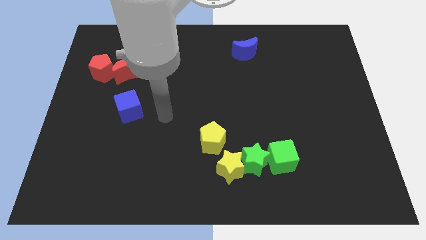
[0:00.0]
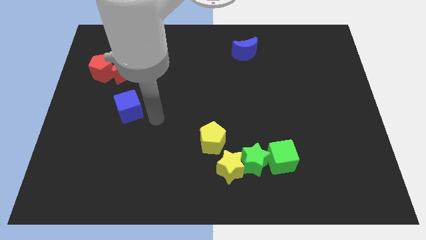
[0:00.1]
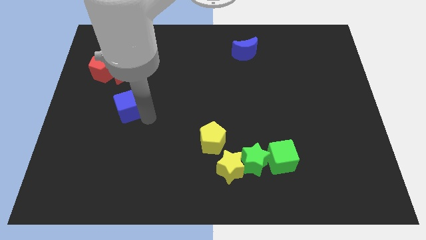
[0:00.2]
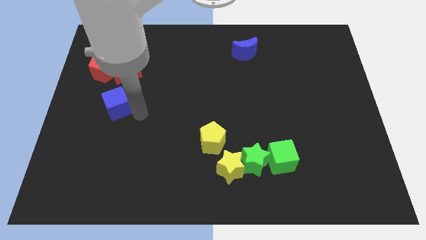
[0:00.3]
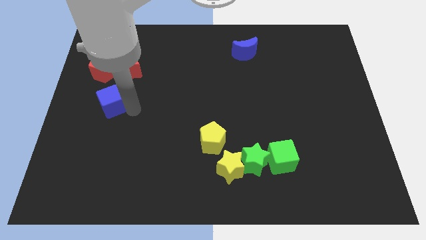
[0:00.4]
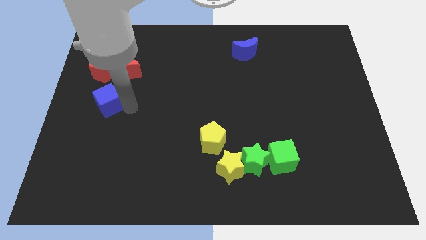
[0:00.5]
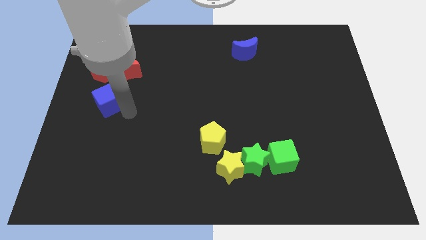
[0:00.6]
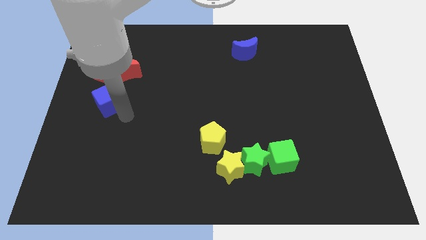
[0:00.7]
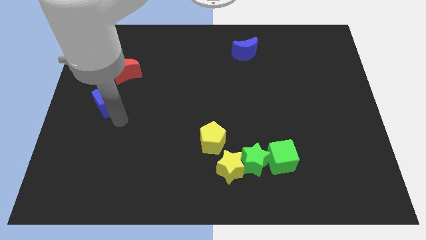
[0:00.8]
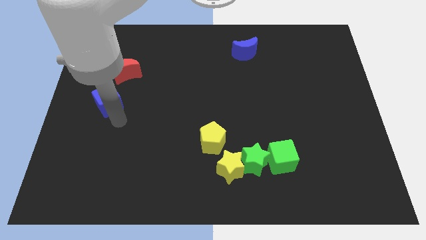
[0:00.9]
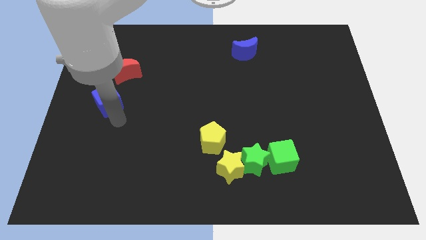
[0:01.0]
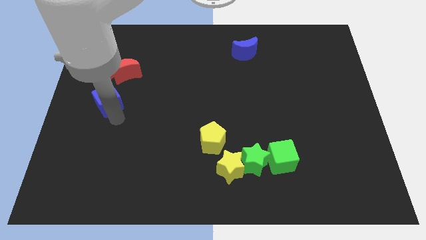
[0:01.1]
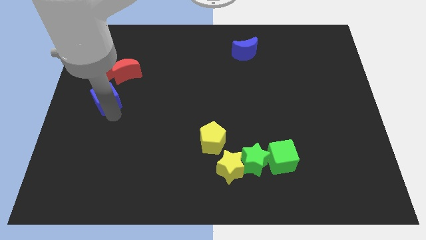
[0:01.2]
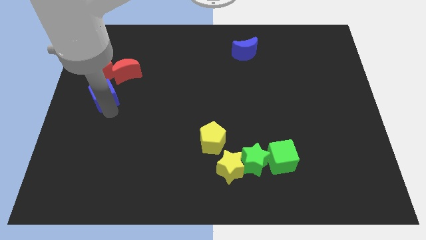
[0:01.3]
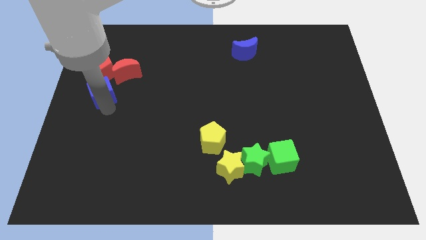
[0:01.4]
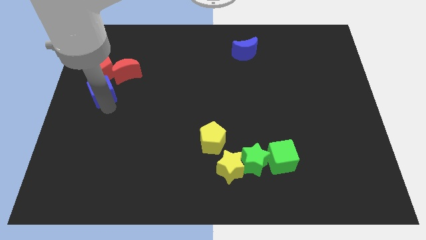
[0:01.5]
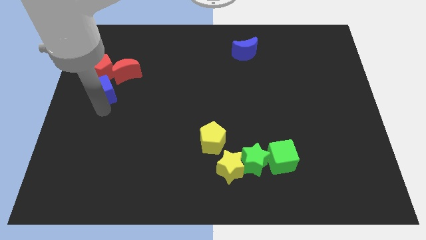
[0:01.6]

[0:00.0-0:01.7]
push blue cube below red pentagon

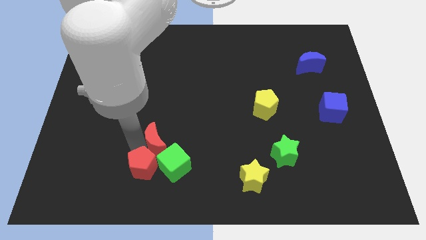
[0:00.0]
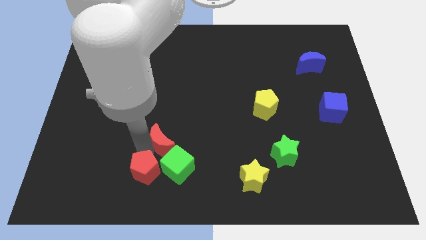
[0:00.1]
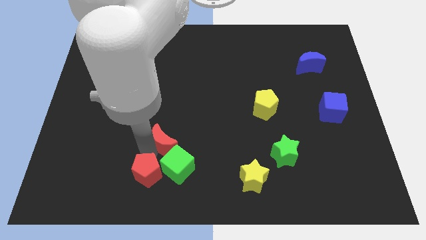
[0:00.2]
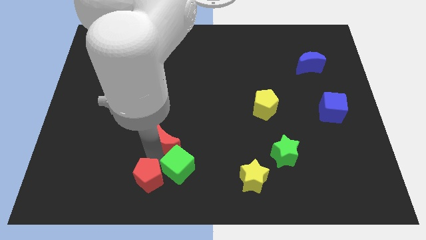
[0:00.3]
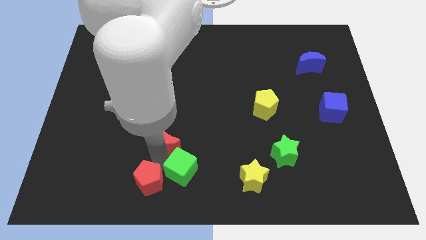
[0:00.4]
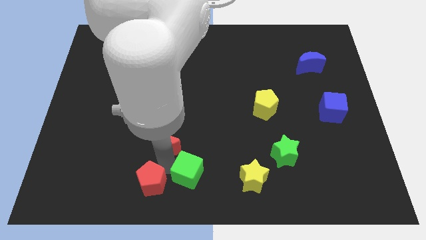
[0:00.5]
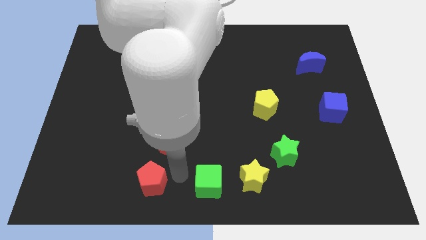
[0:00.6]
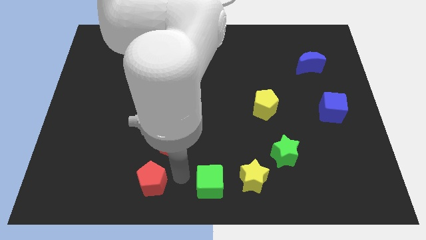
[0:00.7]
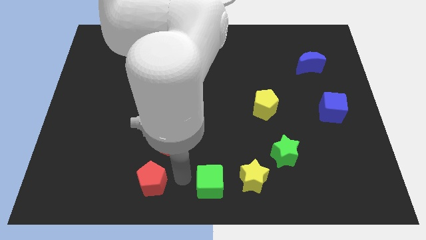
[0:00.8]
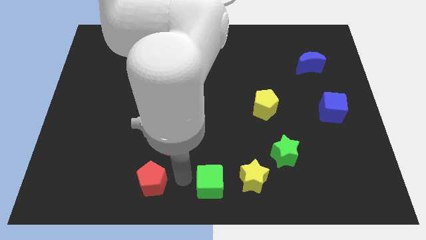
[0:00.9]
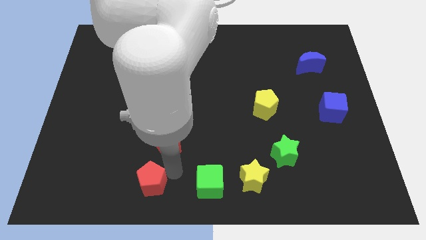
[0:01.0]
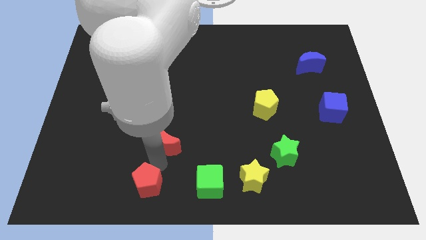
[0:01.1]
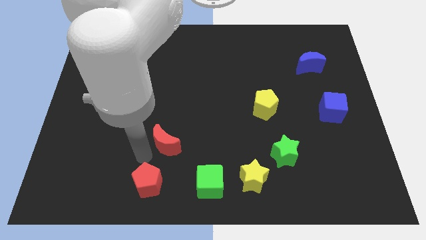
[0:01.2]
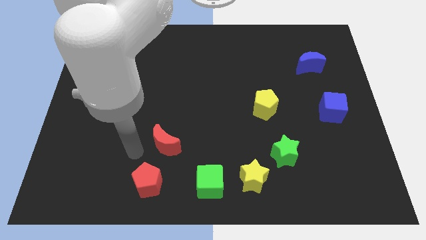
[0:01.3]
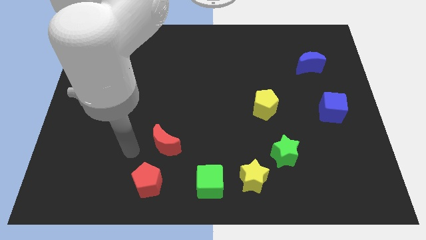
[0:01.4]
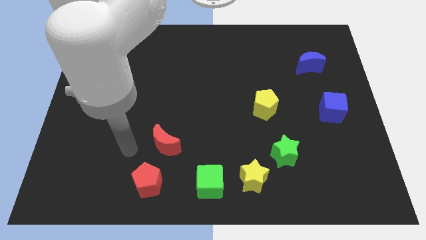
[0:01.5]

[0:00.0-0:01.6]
separate the green cube from the red blocks

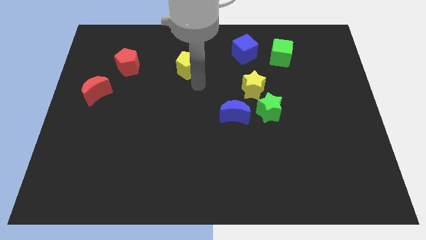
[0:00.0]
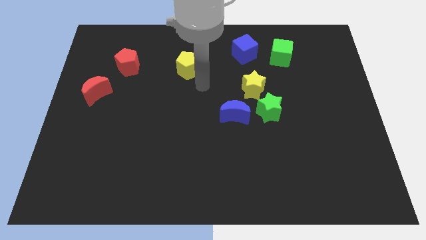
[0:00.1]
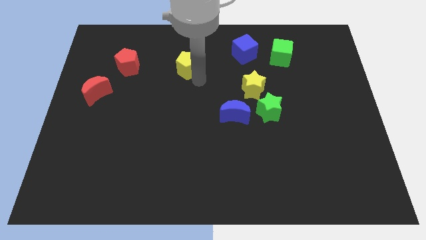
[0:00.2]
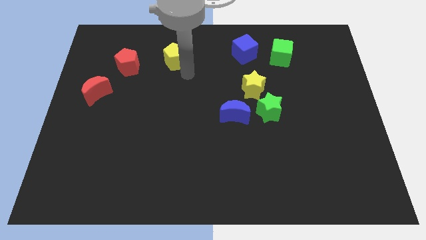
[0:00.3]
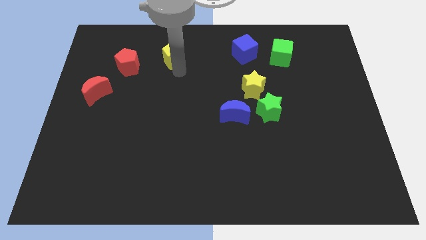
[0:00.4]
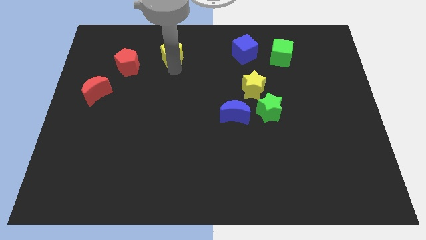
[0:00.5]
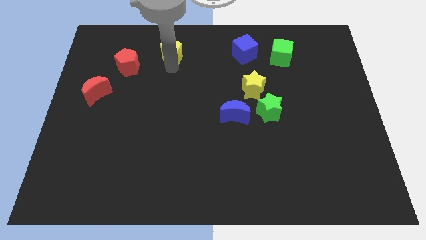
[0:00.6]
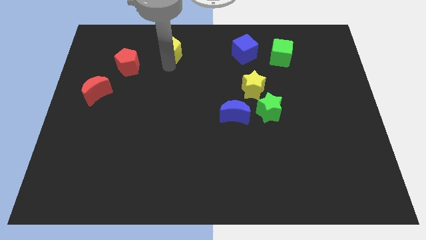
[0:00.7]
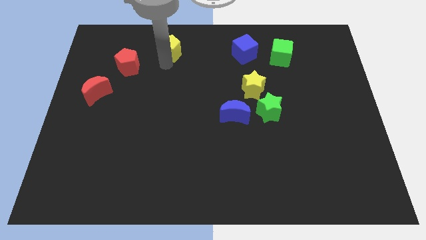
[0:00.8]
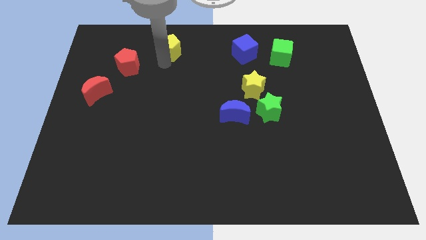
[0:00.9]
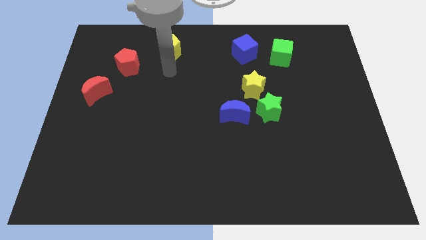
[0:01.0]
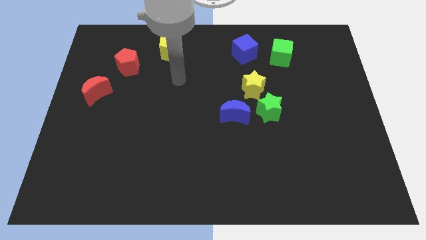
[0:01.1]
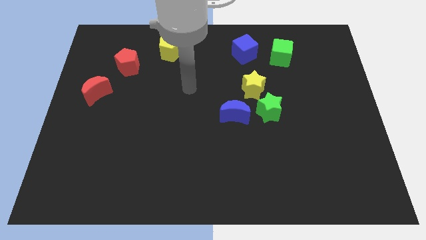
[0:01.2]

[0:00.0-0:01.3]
move the yellow pentagon to the top of the board

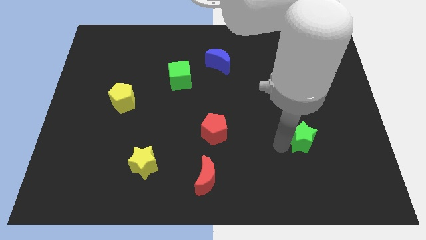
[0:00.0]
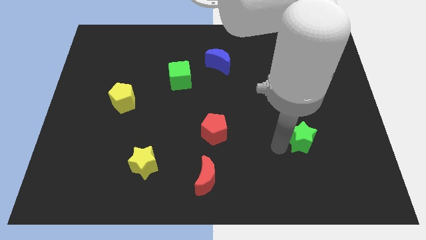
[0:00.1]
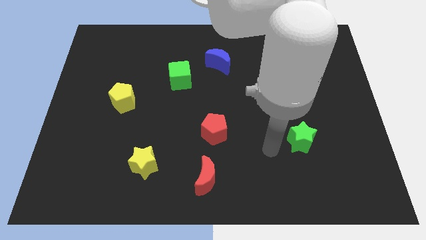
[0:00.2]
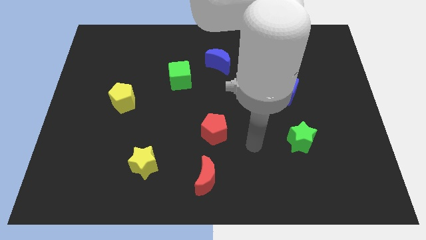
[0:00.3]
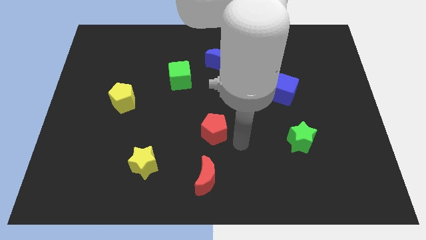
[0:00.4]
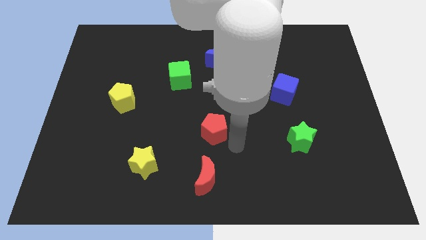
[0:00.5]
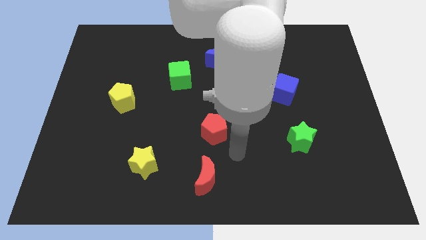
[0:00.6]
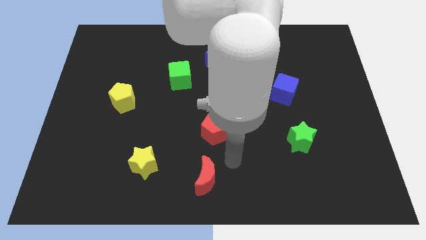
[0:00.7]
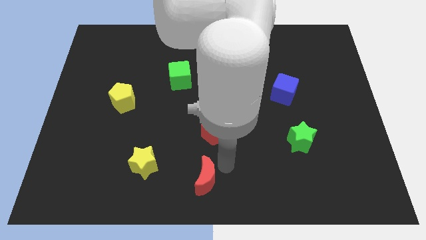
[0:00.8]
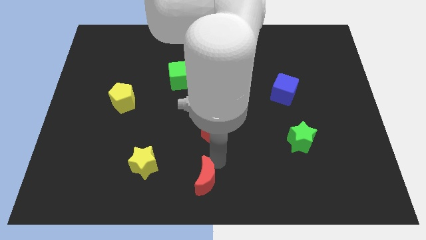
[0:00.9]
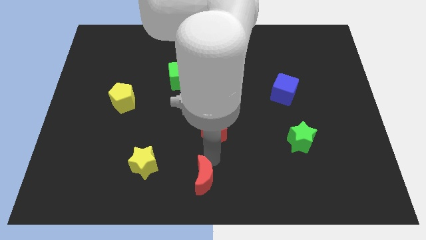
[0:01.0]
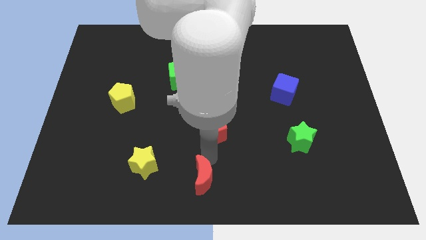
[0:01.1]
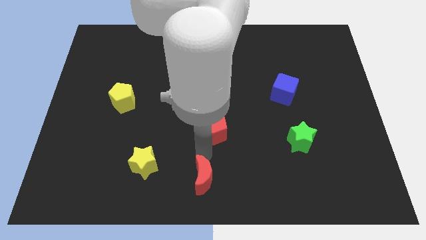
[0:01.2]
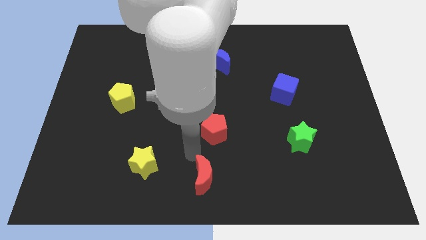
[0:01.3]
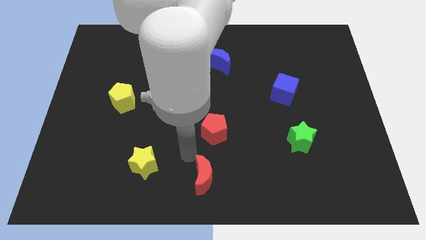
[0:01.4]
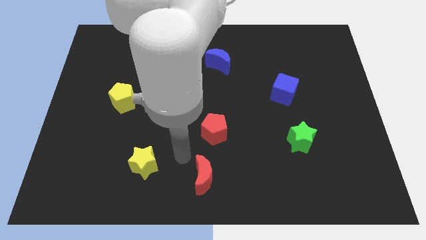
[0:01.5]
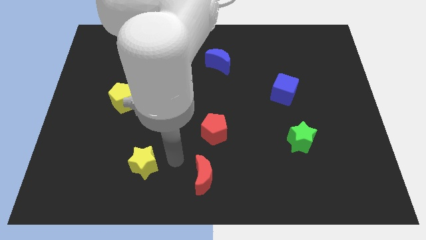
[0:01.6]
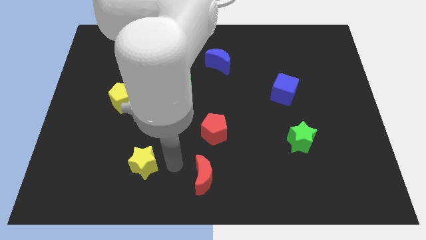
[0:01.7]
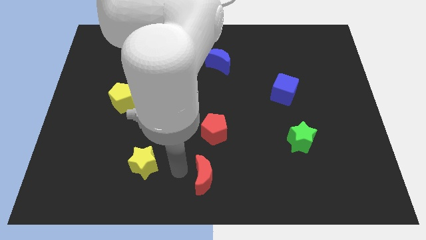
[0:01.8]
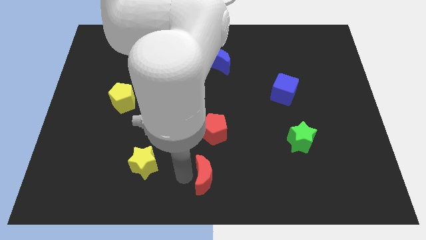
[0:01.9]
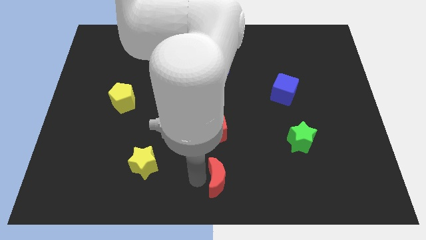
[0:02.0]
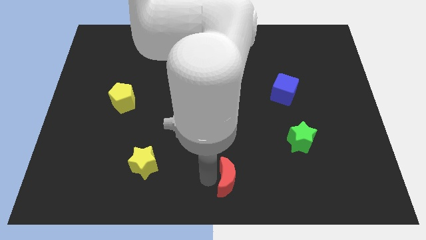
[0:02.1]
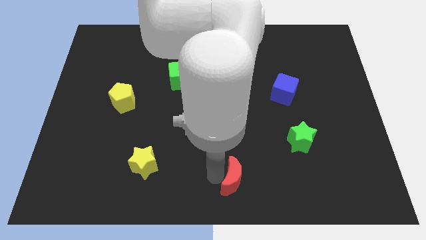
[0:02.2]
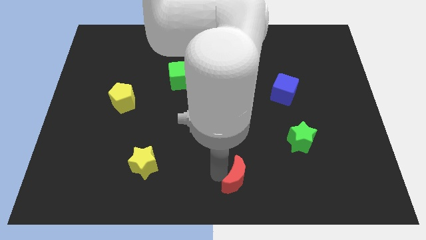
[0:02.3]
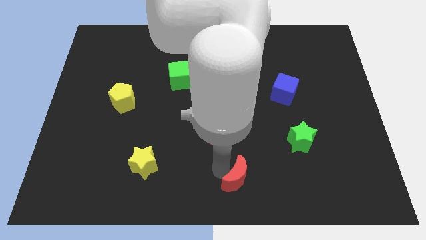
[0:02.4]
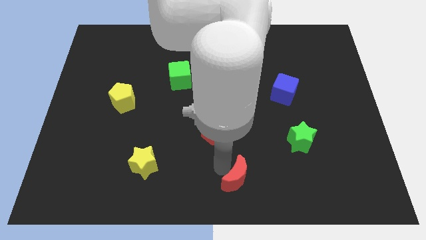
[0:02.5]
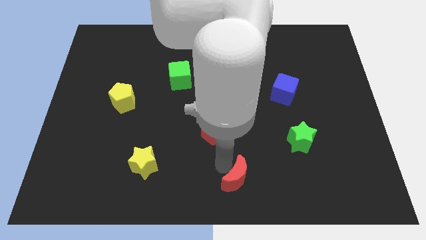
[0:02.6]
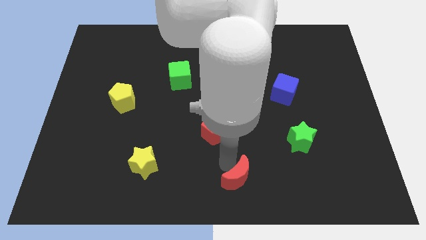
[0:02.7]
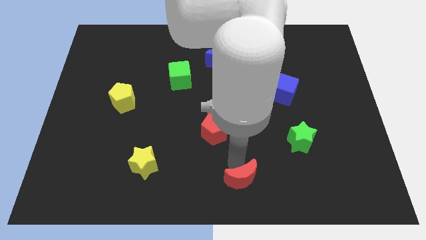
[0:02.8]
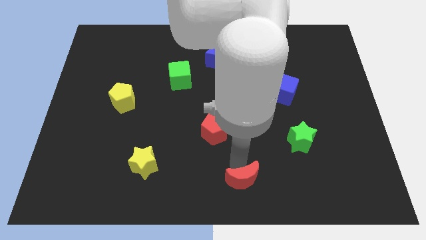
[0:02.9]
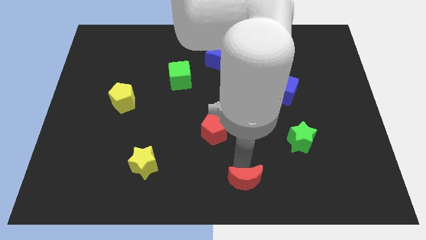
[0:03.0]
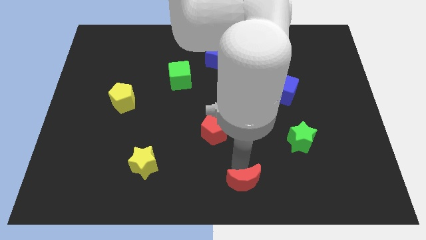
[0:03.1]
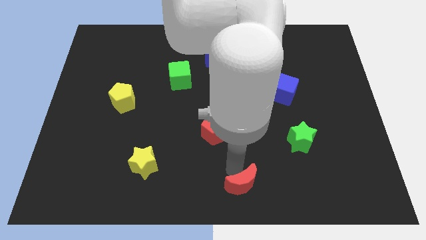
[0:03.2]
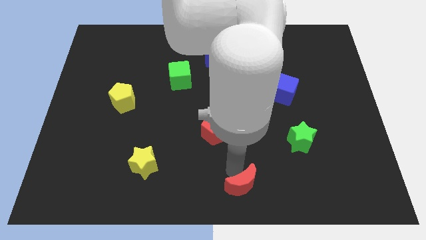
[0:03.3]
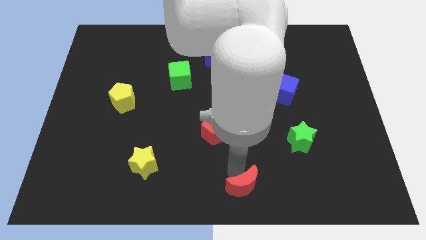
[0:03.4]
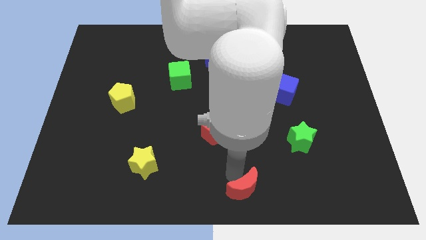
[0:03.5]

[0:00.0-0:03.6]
push red crescent to the bottom of board

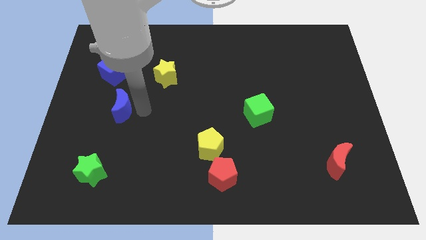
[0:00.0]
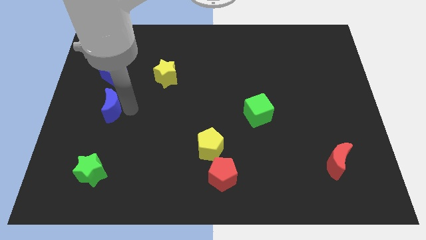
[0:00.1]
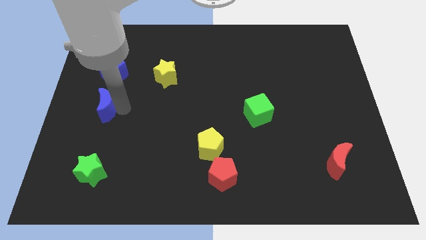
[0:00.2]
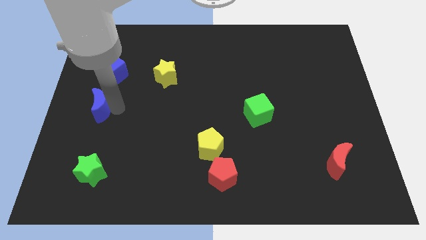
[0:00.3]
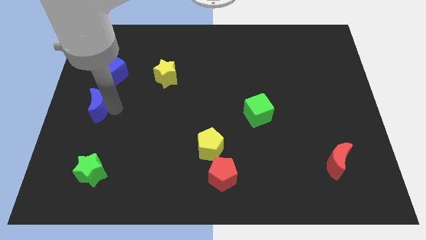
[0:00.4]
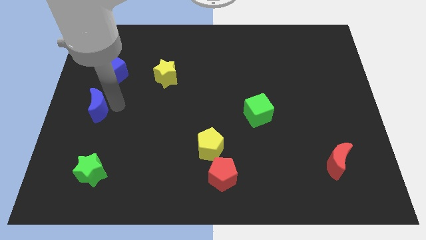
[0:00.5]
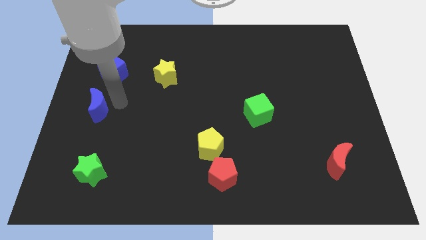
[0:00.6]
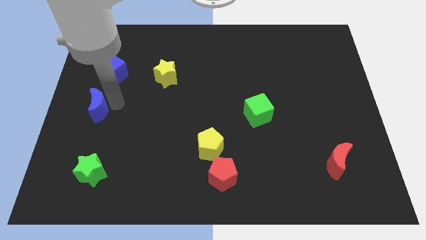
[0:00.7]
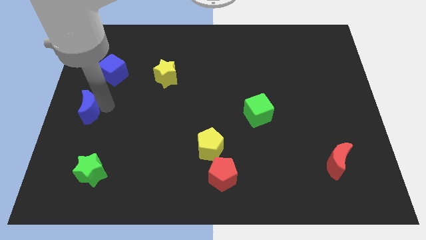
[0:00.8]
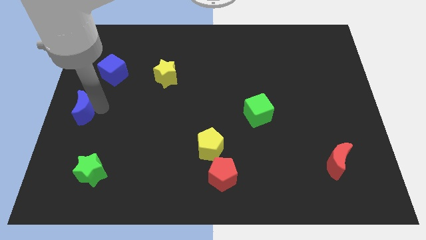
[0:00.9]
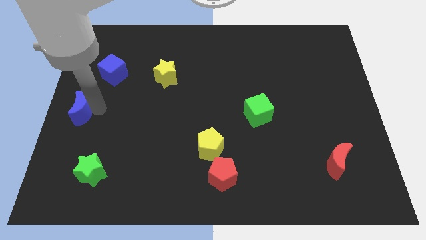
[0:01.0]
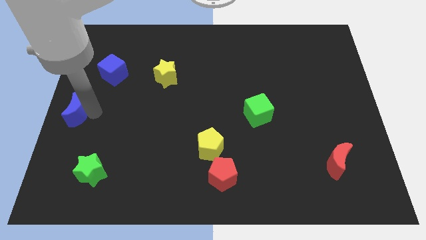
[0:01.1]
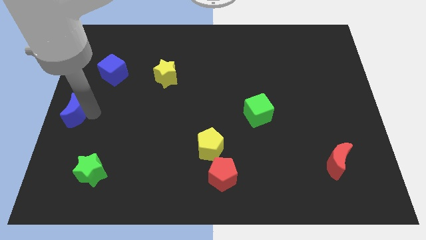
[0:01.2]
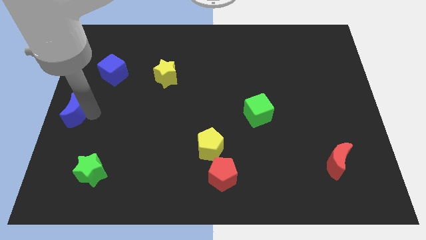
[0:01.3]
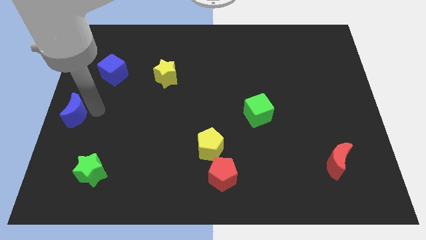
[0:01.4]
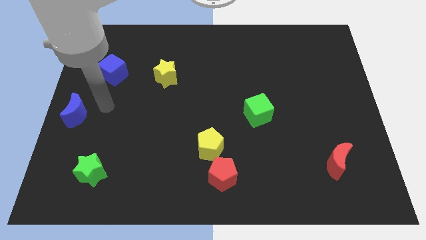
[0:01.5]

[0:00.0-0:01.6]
push the blue crescent to the bottom left of the blue cube
